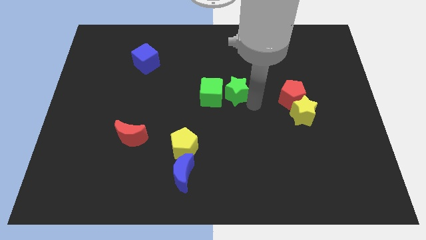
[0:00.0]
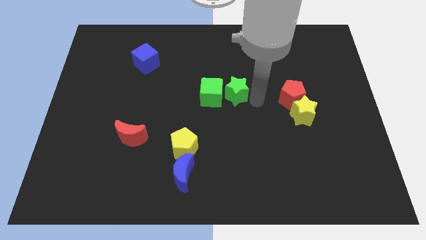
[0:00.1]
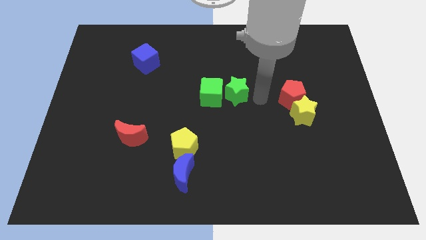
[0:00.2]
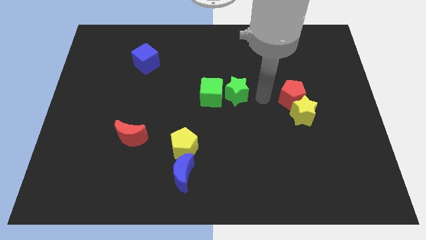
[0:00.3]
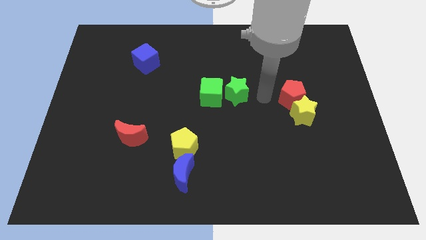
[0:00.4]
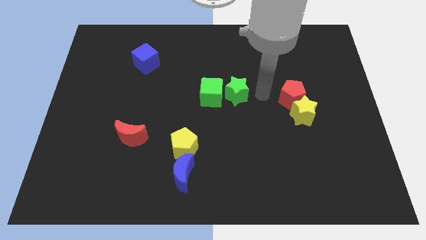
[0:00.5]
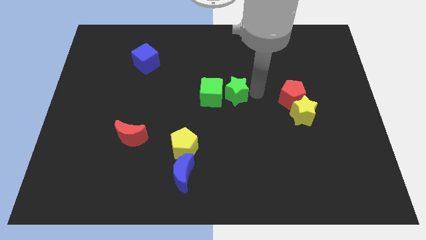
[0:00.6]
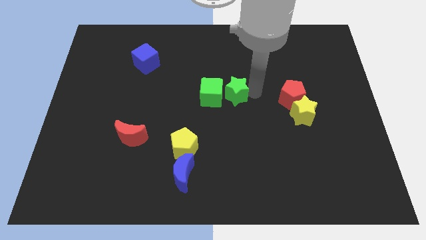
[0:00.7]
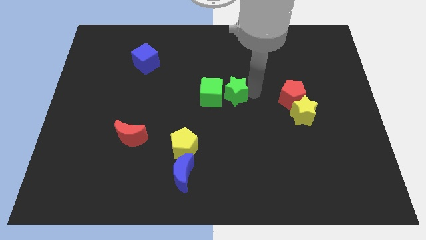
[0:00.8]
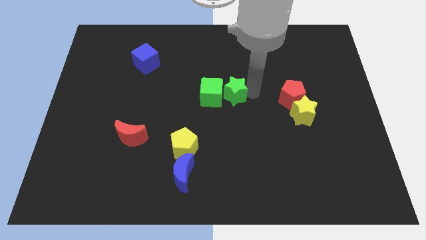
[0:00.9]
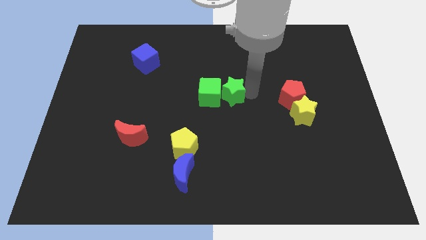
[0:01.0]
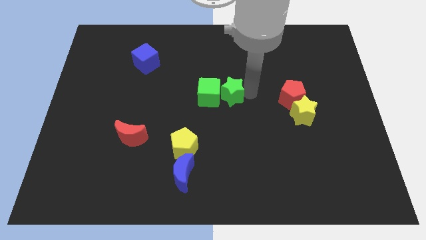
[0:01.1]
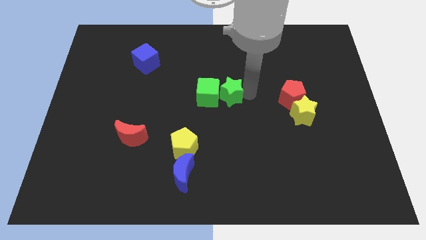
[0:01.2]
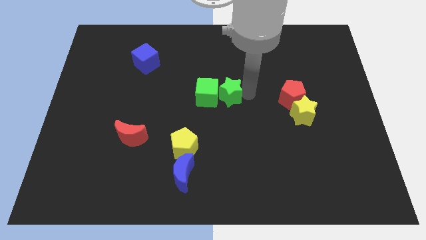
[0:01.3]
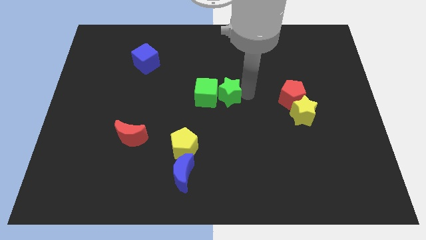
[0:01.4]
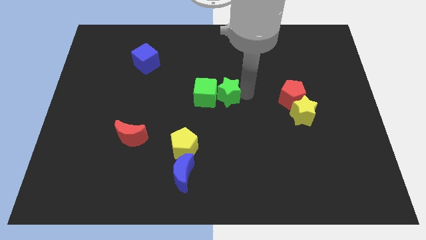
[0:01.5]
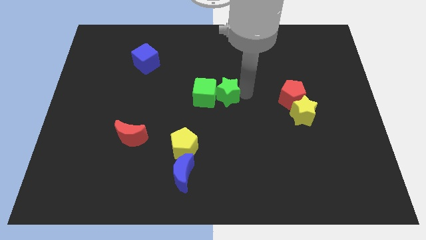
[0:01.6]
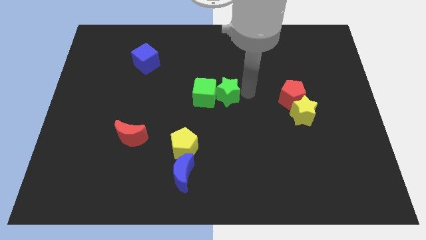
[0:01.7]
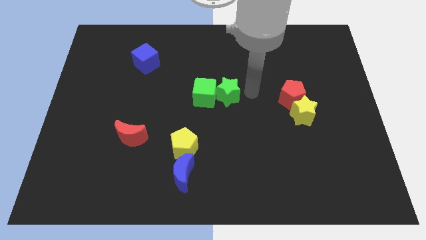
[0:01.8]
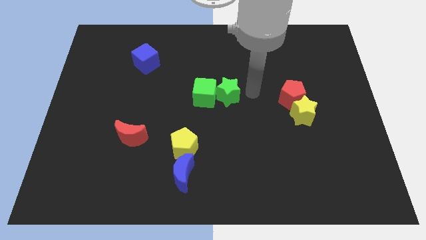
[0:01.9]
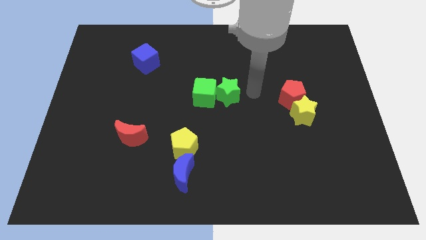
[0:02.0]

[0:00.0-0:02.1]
move green star into green cube

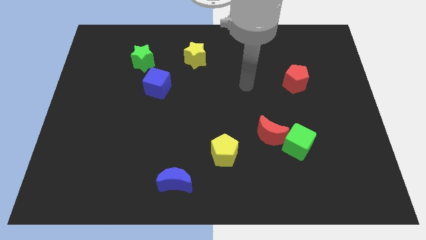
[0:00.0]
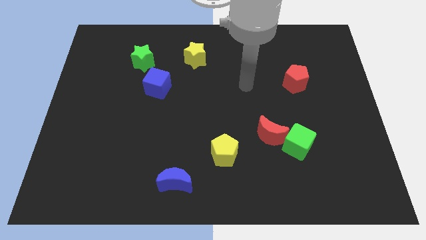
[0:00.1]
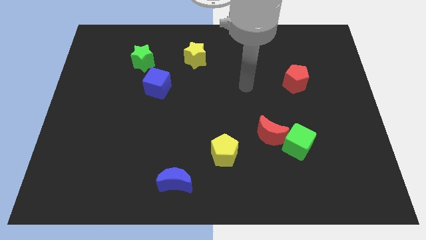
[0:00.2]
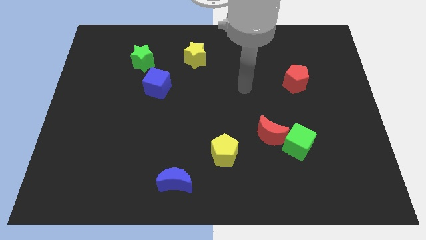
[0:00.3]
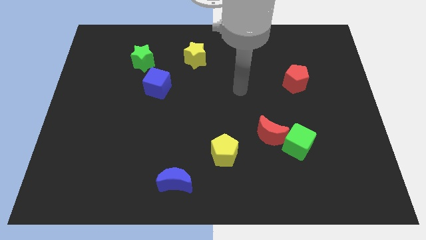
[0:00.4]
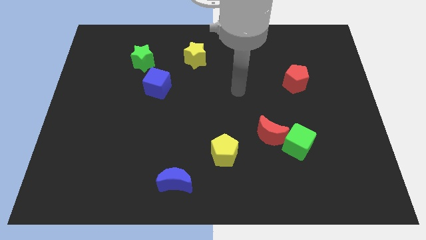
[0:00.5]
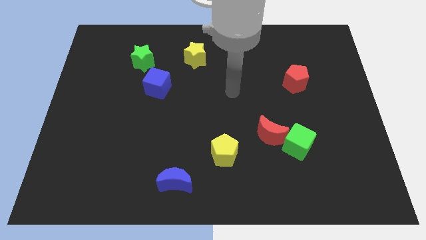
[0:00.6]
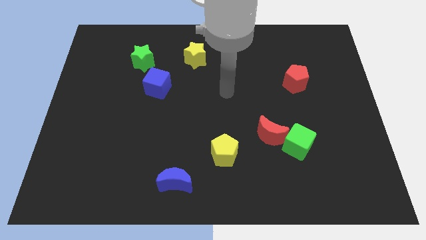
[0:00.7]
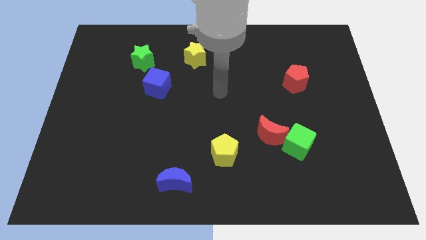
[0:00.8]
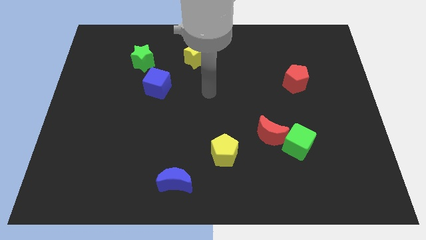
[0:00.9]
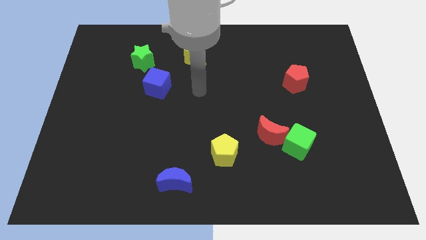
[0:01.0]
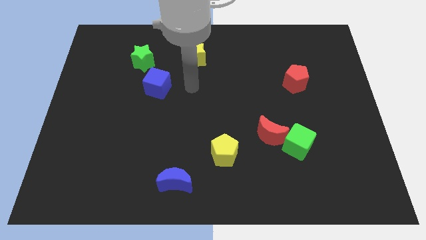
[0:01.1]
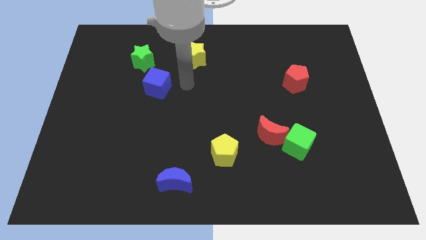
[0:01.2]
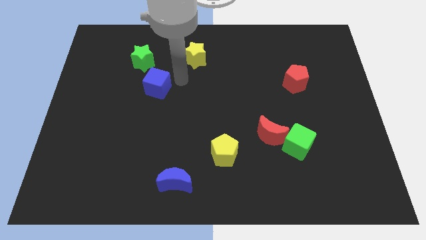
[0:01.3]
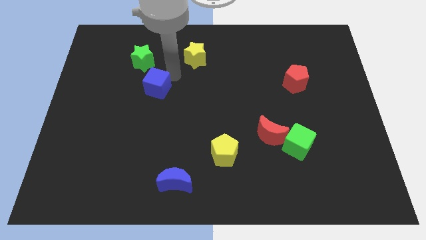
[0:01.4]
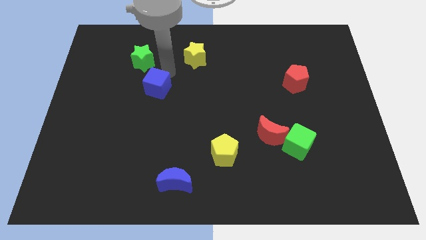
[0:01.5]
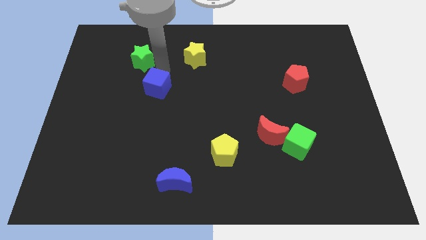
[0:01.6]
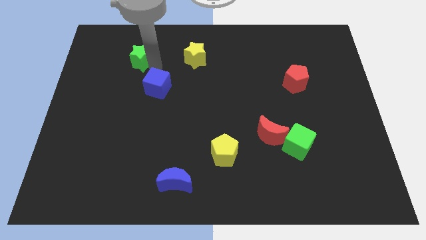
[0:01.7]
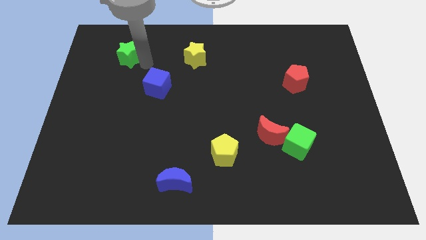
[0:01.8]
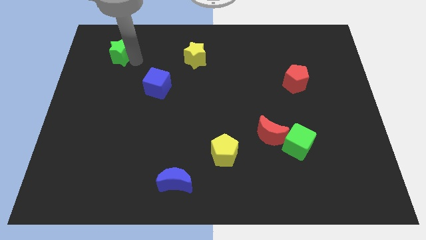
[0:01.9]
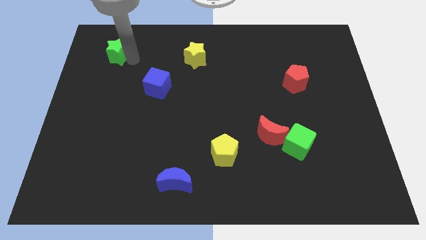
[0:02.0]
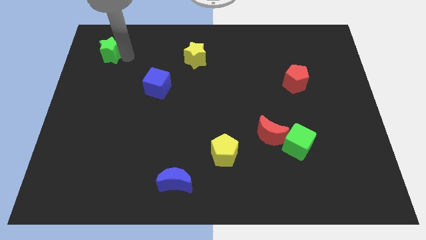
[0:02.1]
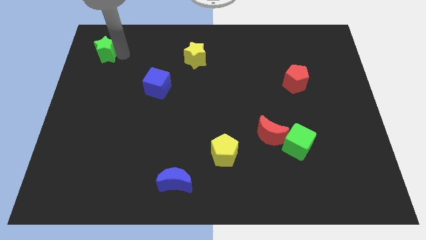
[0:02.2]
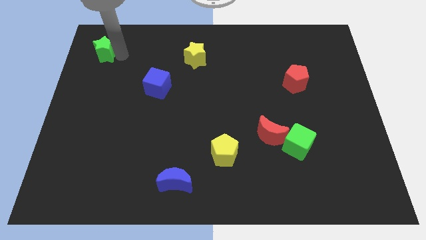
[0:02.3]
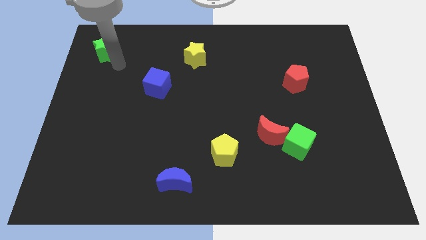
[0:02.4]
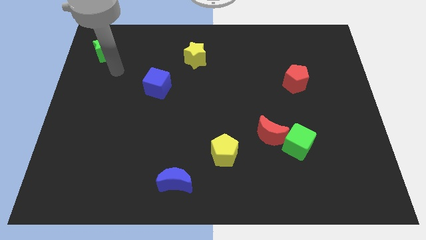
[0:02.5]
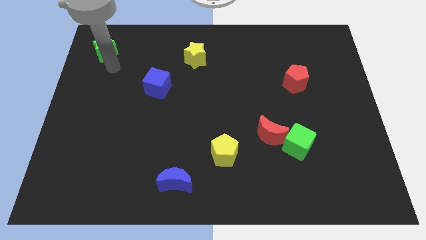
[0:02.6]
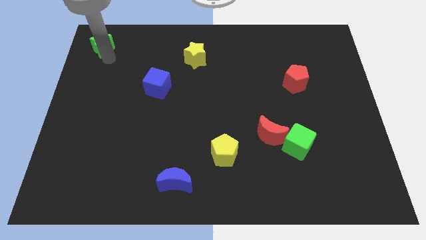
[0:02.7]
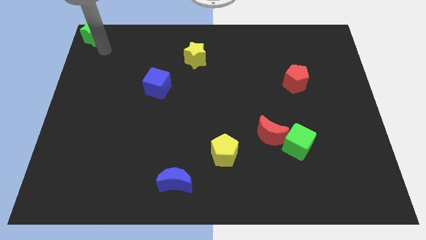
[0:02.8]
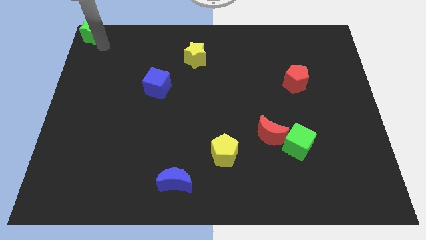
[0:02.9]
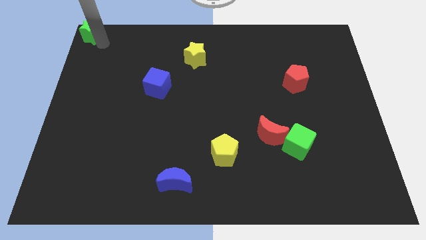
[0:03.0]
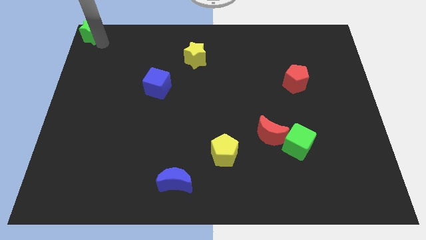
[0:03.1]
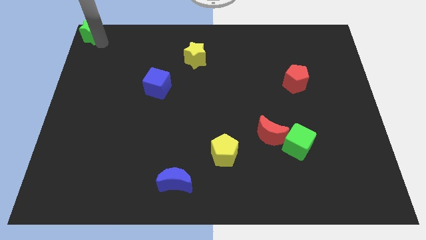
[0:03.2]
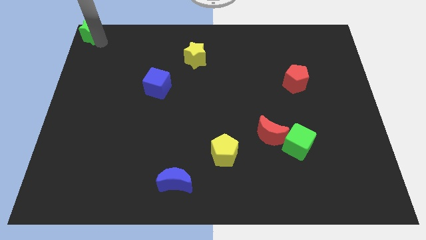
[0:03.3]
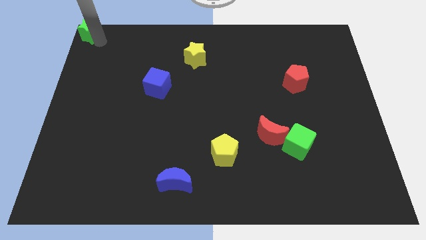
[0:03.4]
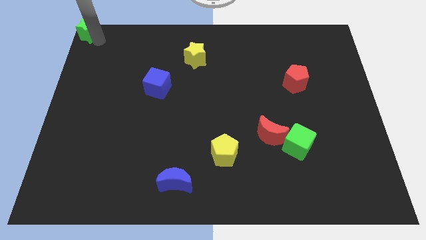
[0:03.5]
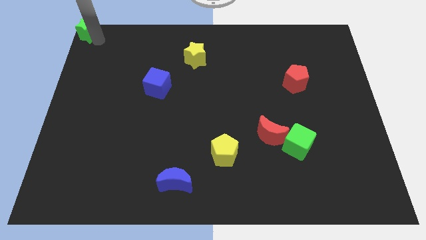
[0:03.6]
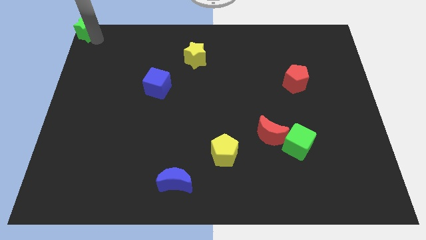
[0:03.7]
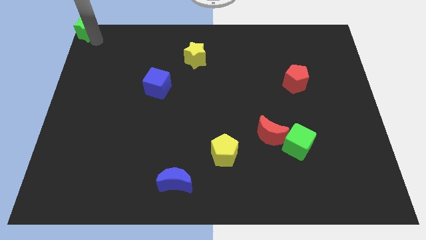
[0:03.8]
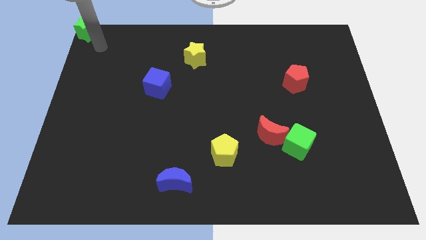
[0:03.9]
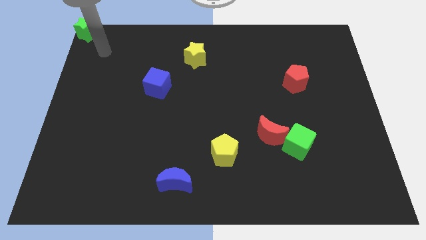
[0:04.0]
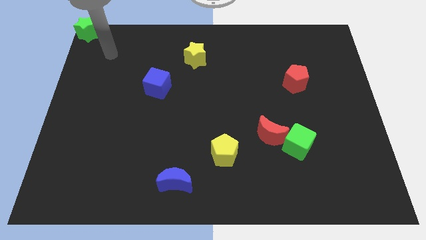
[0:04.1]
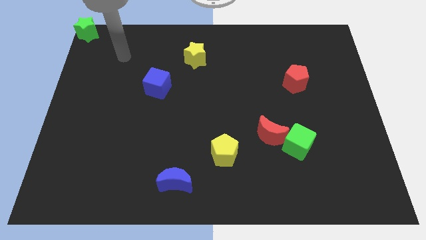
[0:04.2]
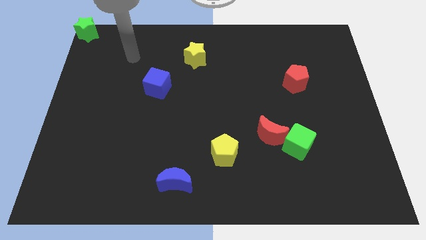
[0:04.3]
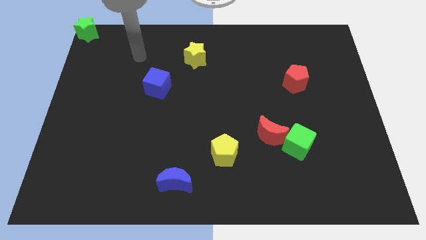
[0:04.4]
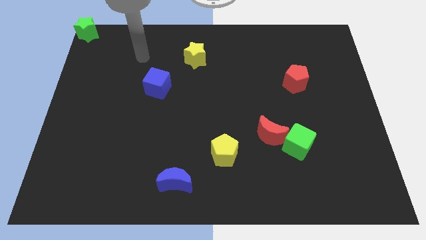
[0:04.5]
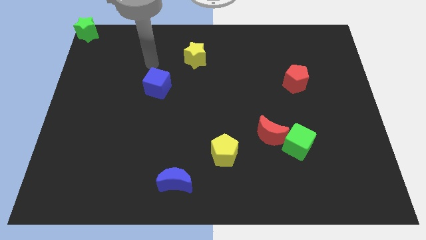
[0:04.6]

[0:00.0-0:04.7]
push green star to top left corner

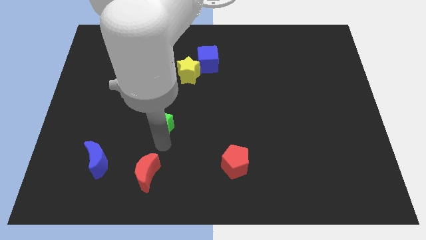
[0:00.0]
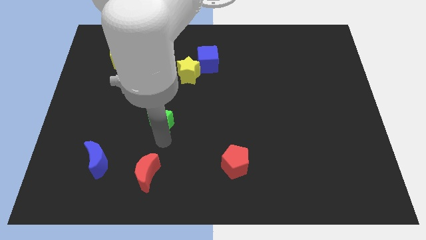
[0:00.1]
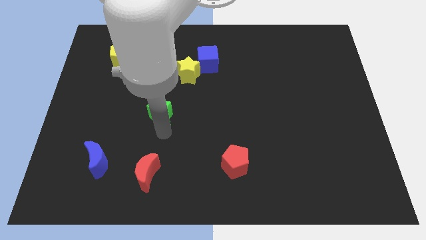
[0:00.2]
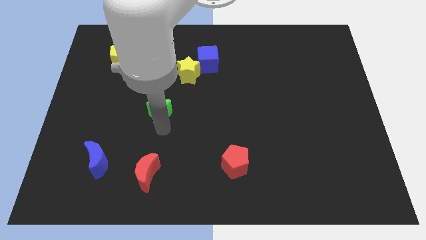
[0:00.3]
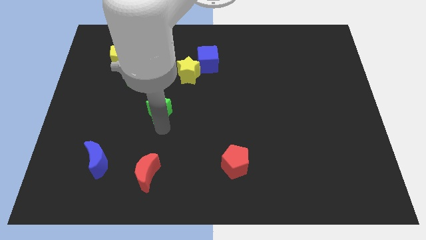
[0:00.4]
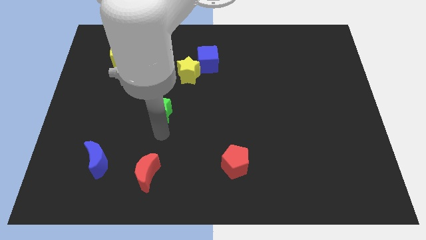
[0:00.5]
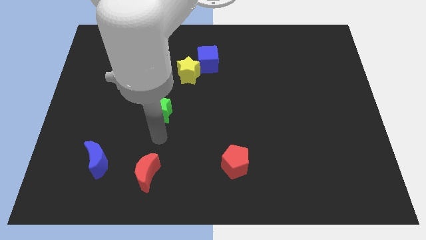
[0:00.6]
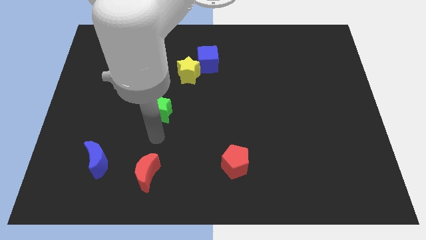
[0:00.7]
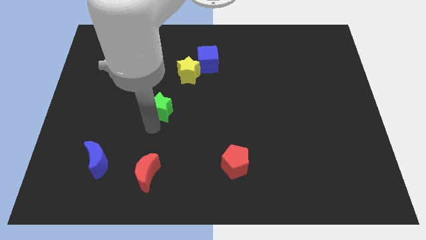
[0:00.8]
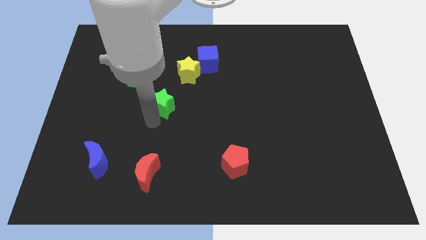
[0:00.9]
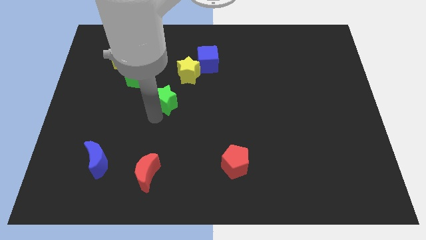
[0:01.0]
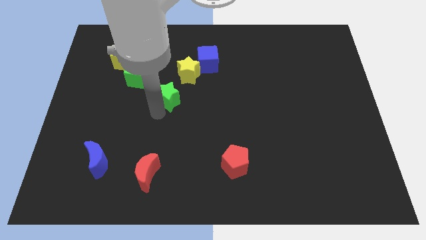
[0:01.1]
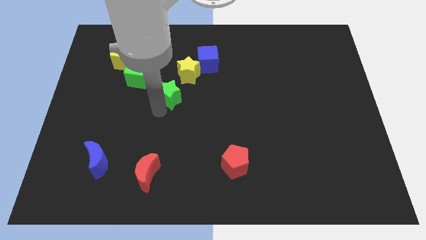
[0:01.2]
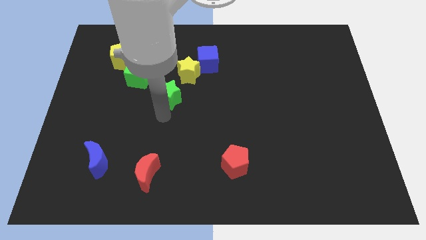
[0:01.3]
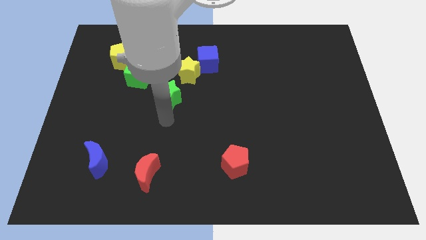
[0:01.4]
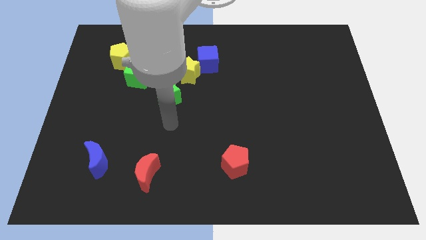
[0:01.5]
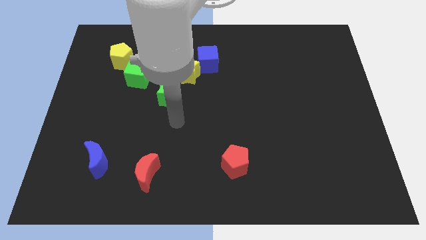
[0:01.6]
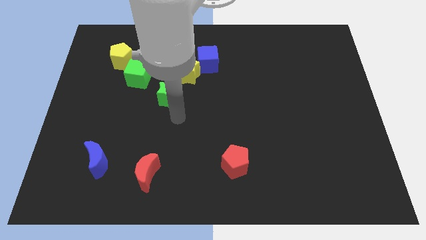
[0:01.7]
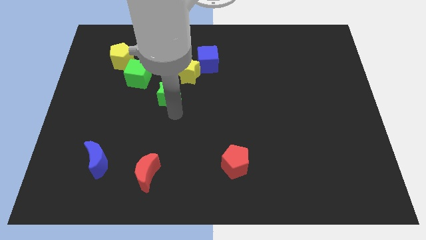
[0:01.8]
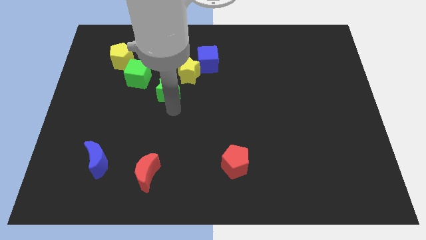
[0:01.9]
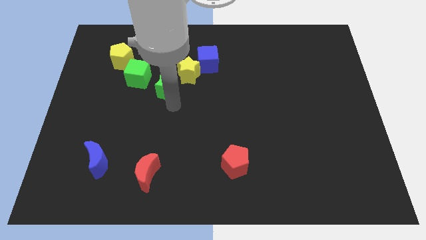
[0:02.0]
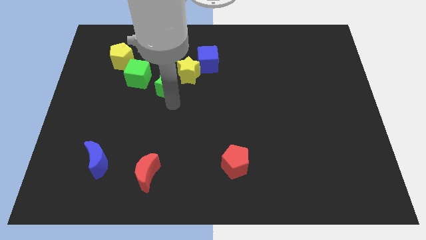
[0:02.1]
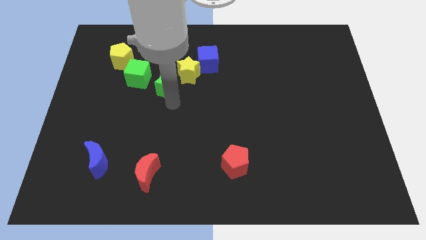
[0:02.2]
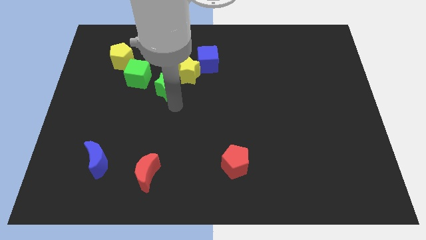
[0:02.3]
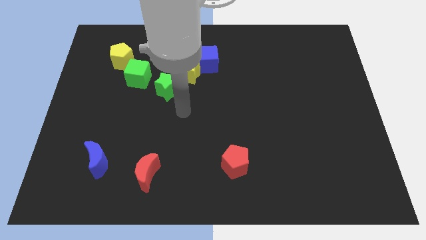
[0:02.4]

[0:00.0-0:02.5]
put the green star at the left bottom of the yellow star
